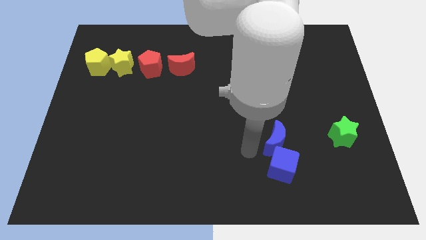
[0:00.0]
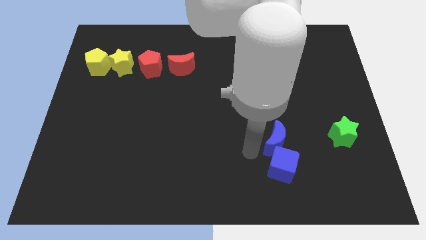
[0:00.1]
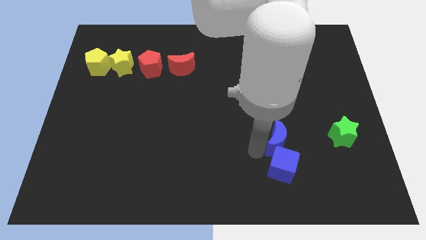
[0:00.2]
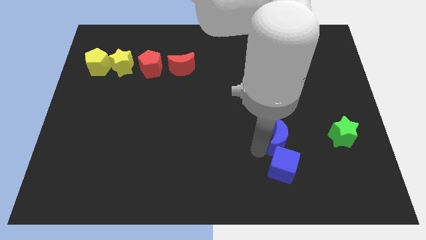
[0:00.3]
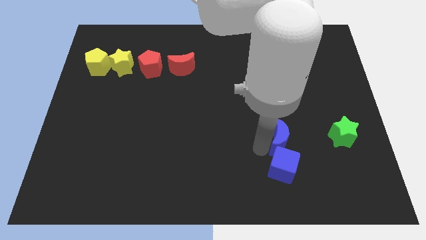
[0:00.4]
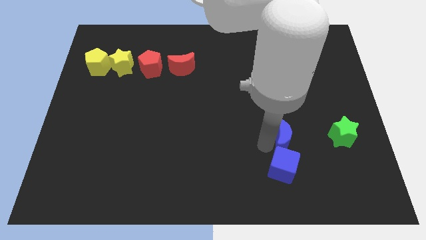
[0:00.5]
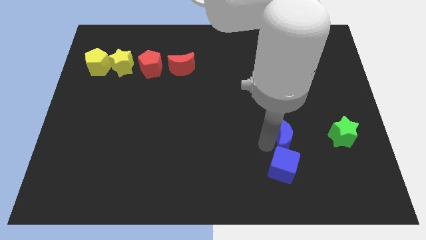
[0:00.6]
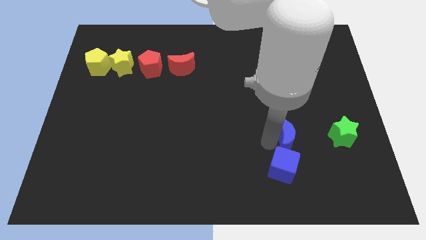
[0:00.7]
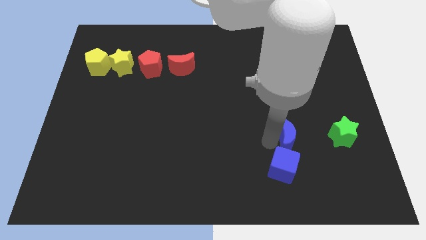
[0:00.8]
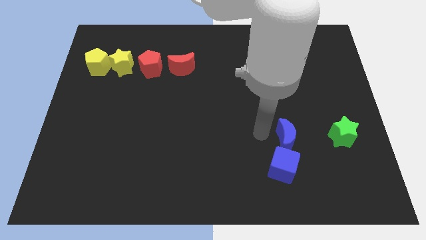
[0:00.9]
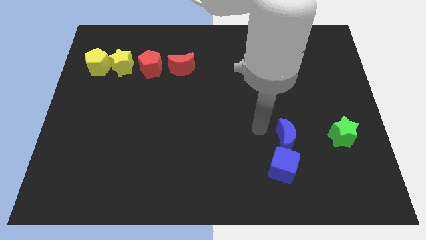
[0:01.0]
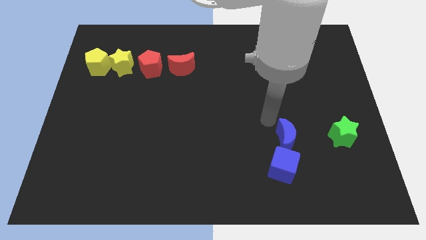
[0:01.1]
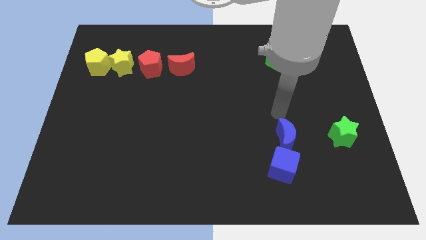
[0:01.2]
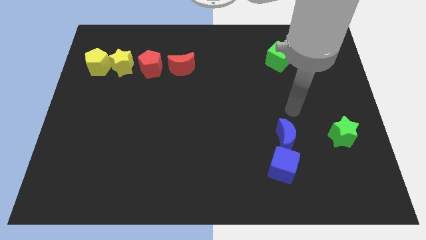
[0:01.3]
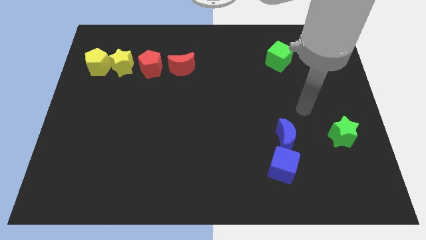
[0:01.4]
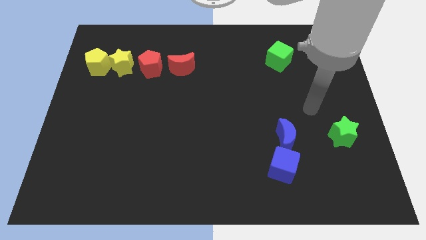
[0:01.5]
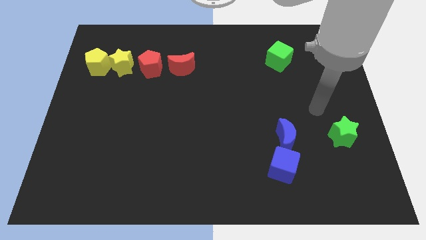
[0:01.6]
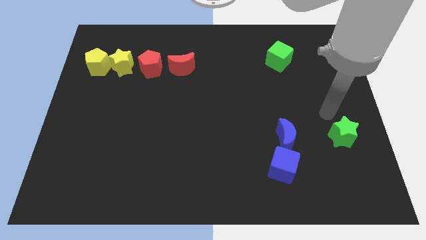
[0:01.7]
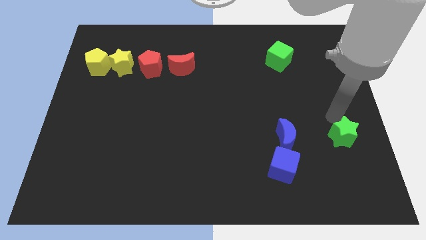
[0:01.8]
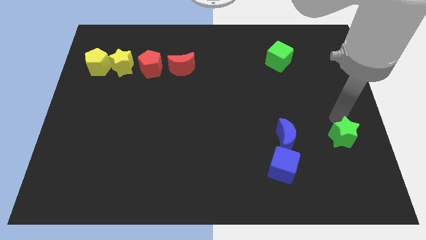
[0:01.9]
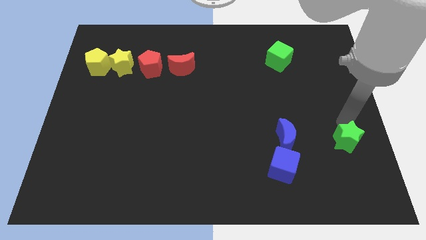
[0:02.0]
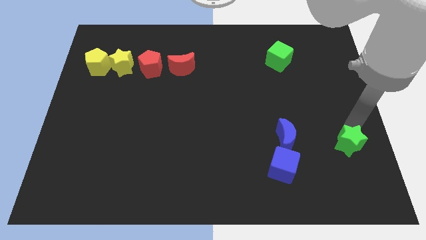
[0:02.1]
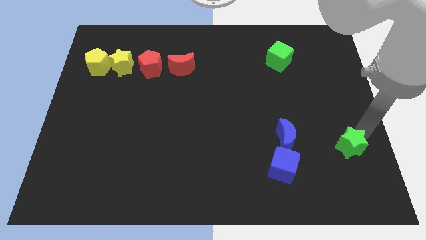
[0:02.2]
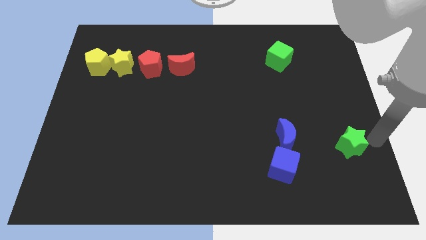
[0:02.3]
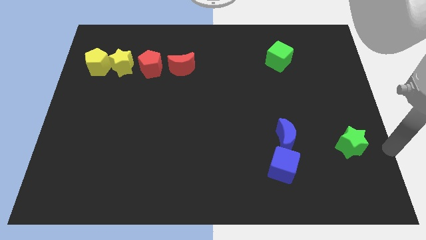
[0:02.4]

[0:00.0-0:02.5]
adjust the green star horizontally to the right of the blue moon

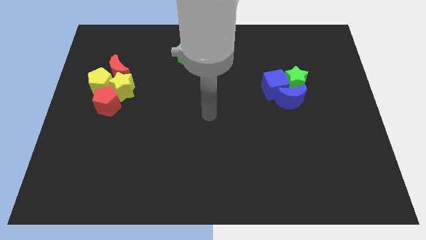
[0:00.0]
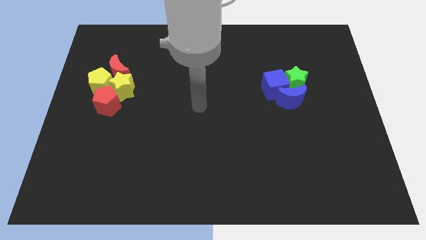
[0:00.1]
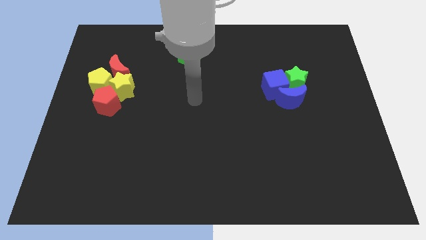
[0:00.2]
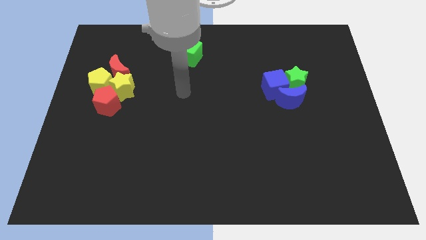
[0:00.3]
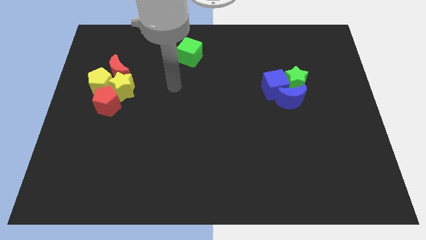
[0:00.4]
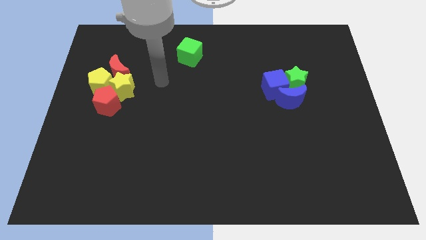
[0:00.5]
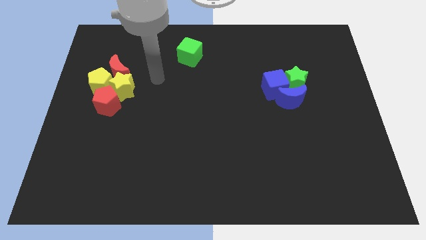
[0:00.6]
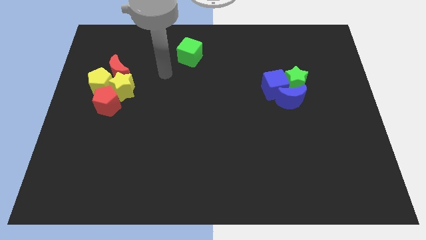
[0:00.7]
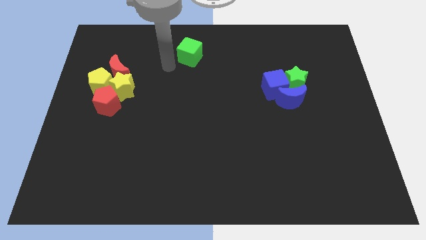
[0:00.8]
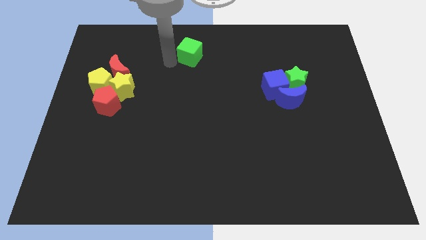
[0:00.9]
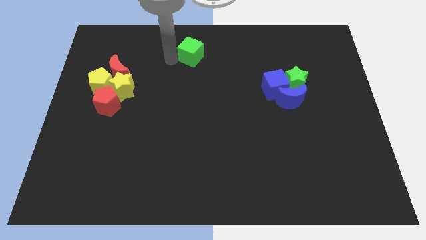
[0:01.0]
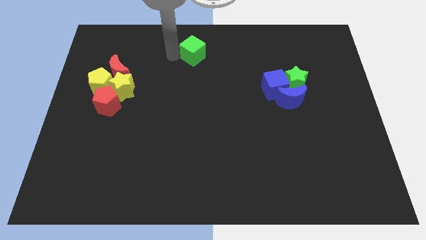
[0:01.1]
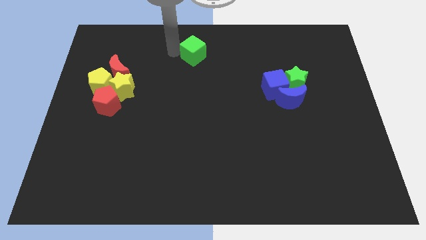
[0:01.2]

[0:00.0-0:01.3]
slightly move the green cube to the right

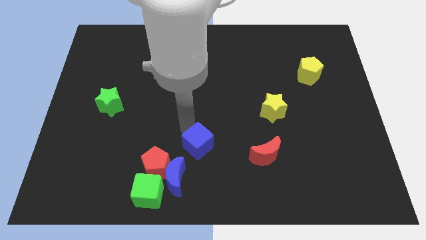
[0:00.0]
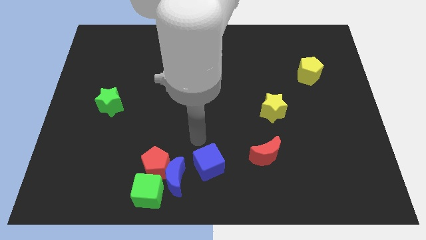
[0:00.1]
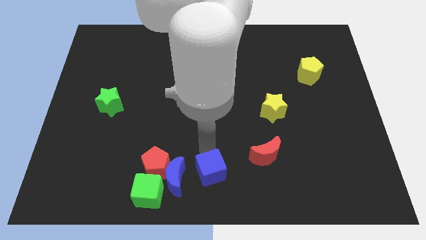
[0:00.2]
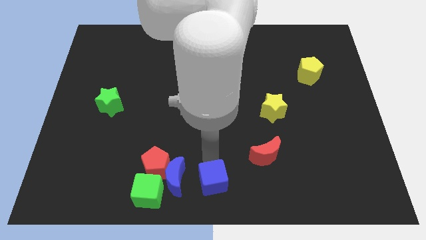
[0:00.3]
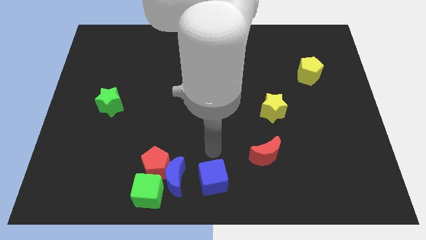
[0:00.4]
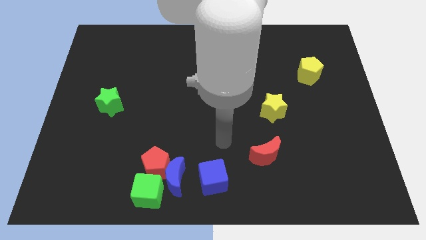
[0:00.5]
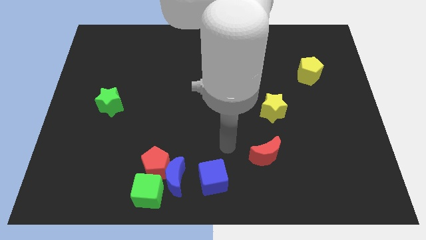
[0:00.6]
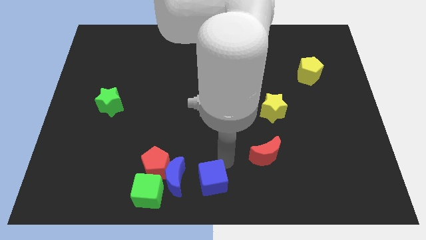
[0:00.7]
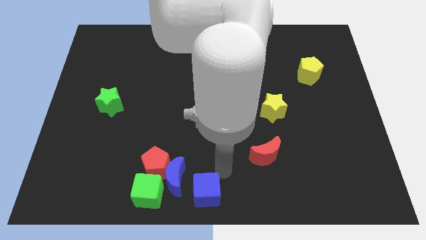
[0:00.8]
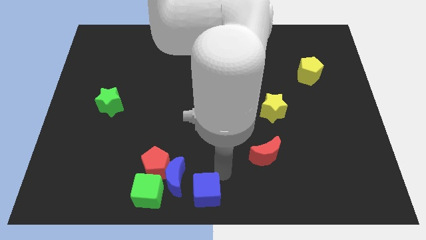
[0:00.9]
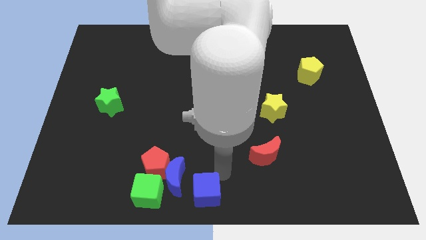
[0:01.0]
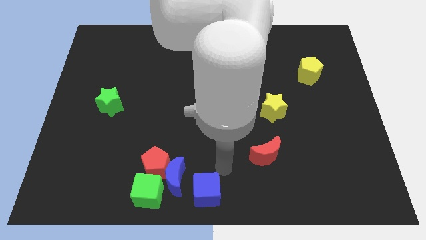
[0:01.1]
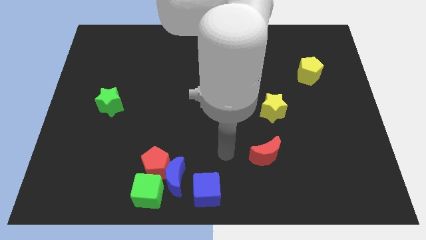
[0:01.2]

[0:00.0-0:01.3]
place blue cube right to blue moon

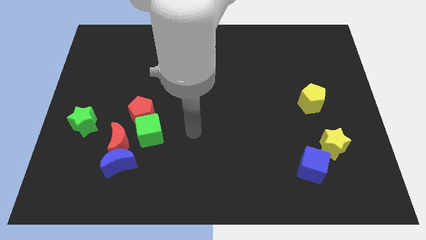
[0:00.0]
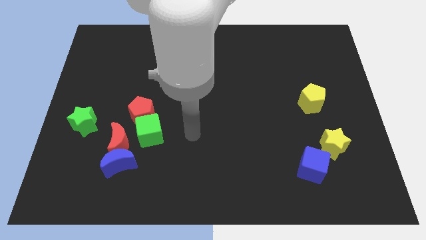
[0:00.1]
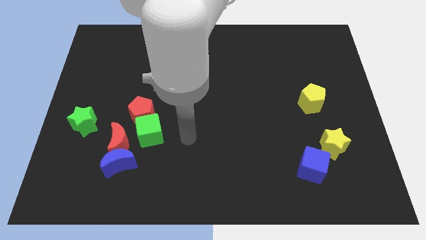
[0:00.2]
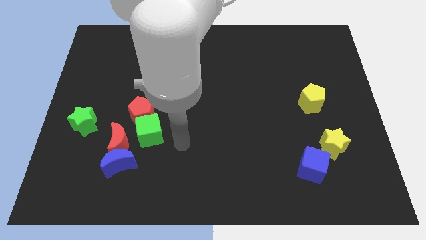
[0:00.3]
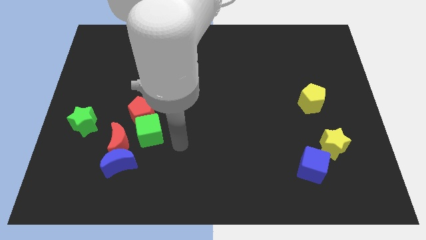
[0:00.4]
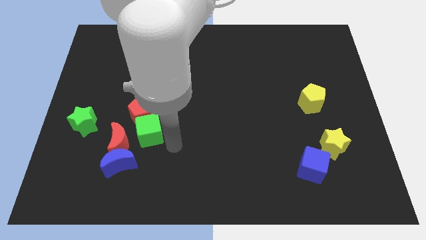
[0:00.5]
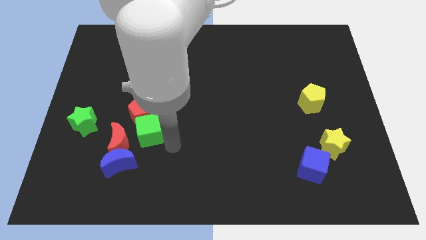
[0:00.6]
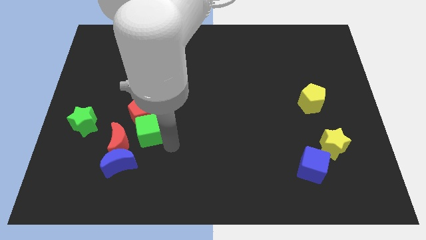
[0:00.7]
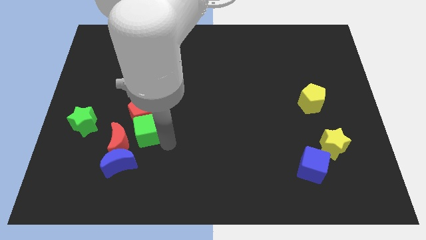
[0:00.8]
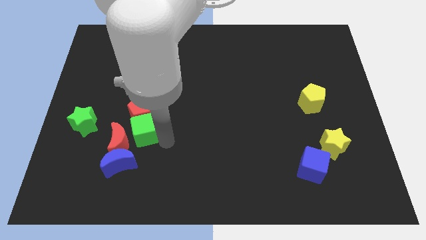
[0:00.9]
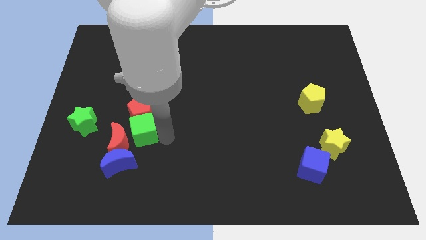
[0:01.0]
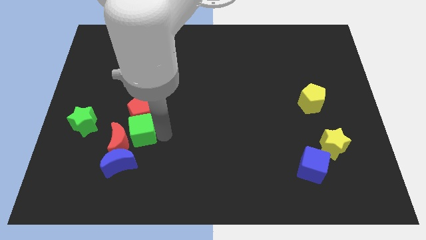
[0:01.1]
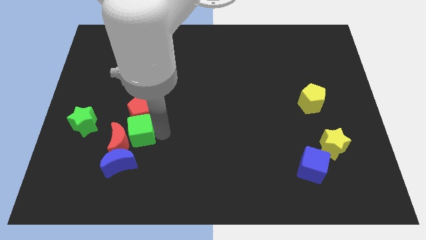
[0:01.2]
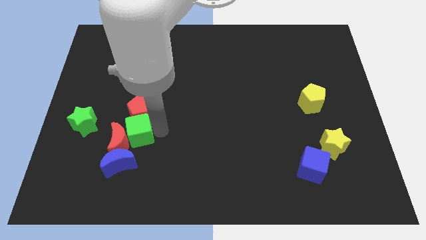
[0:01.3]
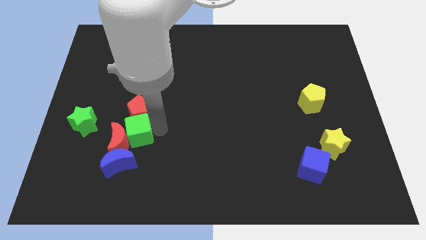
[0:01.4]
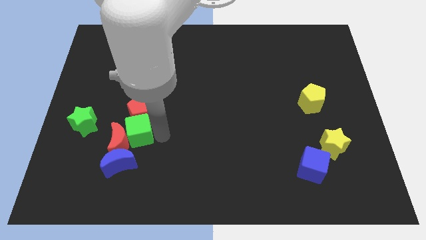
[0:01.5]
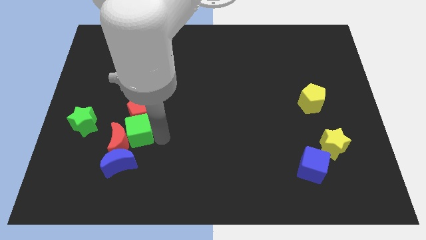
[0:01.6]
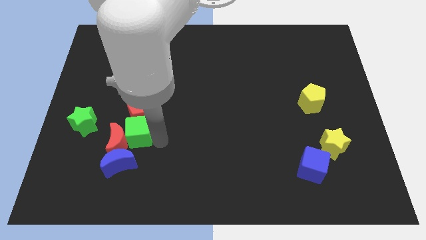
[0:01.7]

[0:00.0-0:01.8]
push the green cube into the red crescent

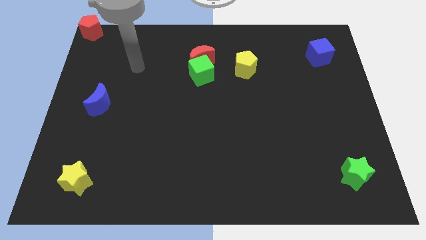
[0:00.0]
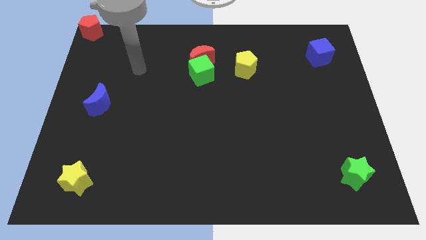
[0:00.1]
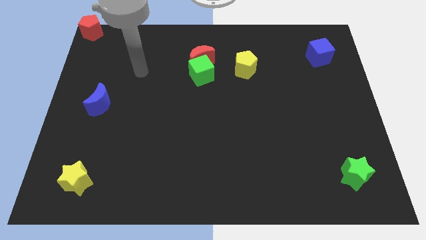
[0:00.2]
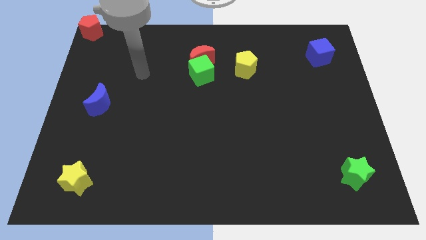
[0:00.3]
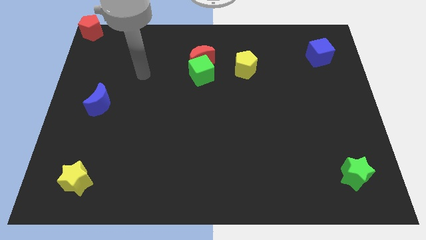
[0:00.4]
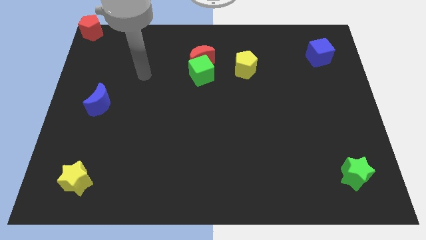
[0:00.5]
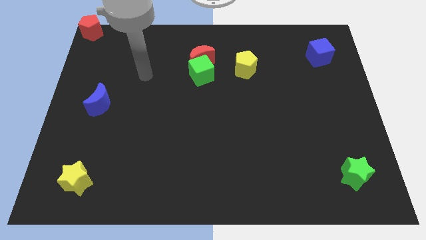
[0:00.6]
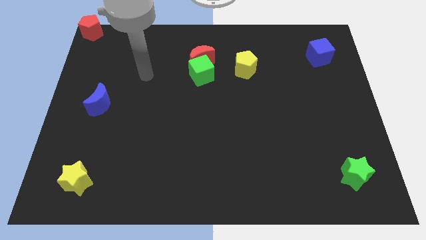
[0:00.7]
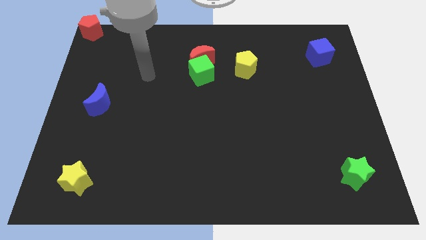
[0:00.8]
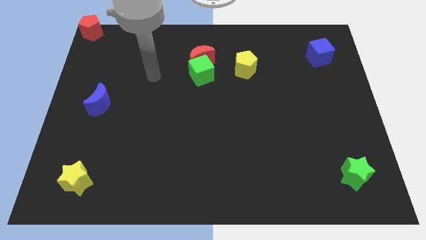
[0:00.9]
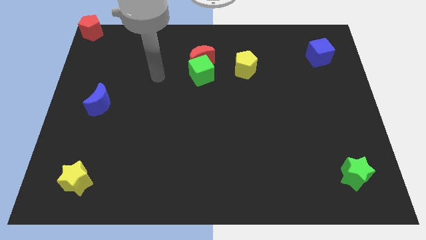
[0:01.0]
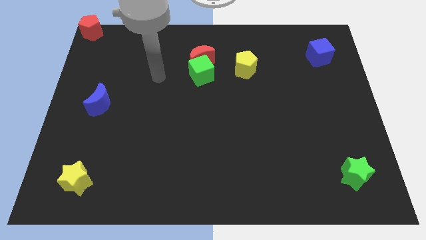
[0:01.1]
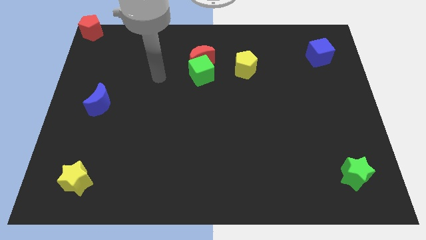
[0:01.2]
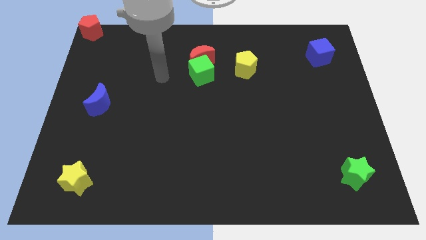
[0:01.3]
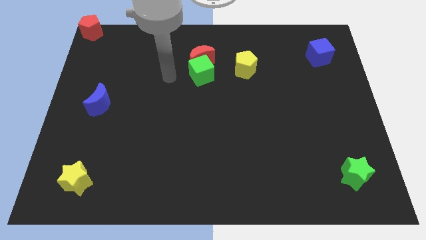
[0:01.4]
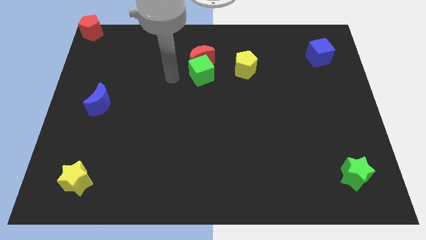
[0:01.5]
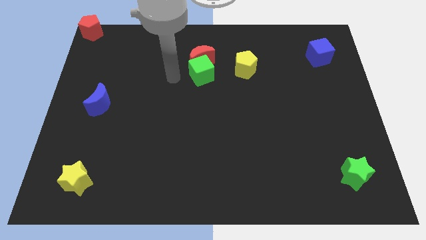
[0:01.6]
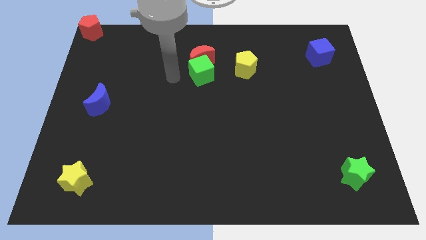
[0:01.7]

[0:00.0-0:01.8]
place your arm close to the green cube

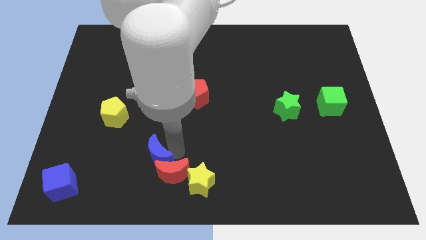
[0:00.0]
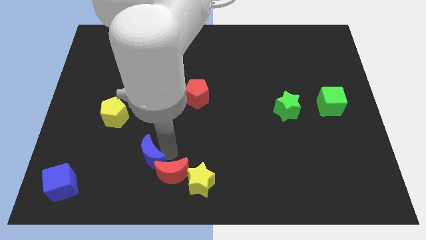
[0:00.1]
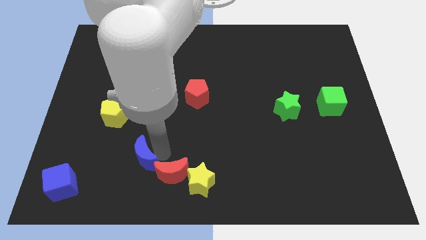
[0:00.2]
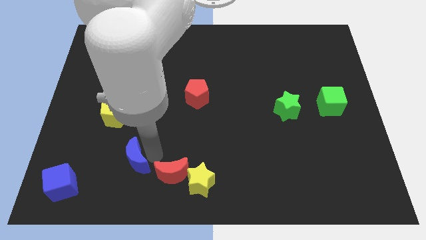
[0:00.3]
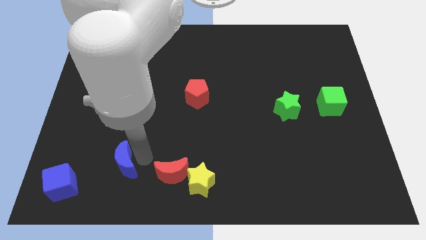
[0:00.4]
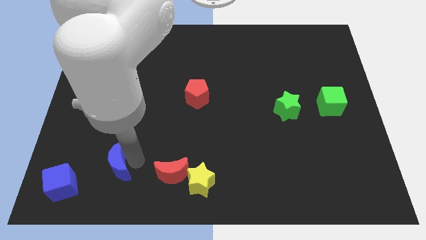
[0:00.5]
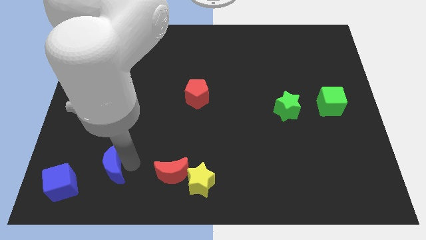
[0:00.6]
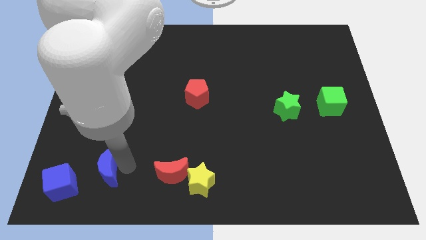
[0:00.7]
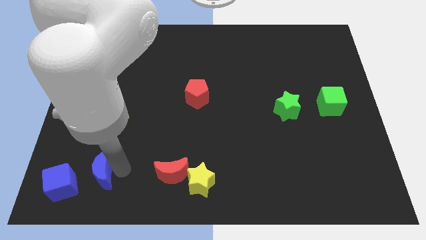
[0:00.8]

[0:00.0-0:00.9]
place the blue moon below the yellow pentagon
